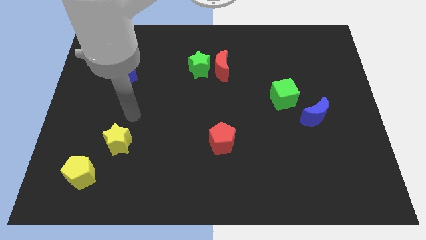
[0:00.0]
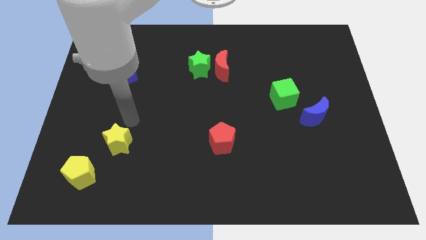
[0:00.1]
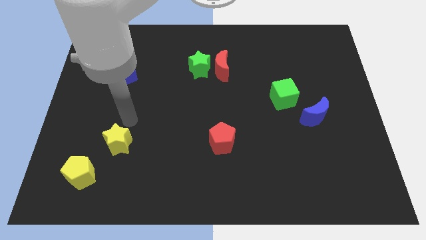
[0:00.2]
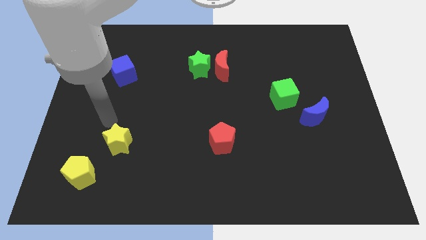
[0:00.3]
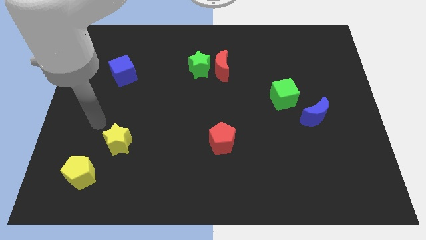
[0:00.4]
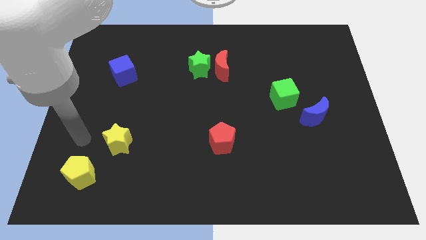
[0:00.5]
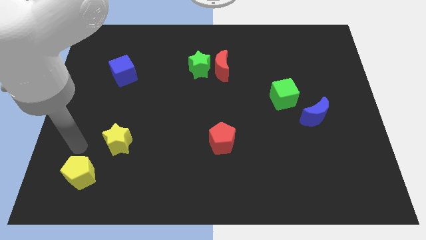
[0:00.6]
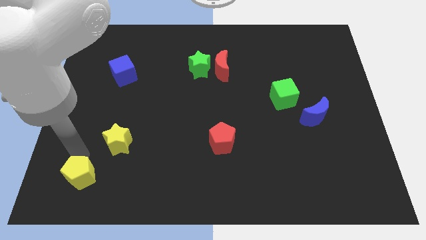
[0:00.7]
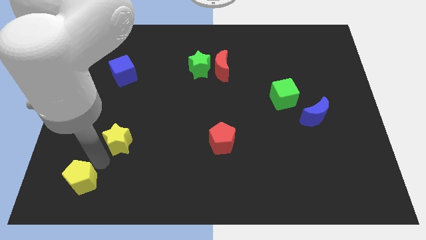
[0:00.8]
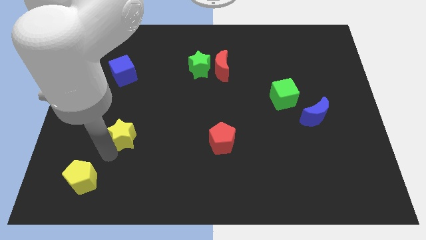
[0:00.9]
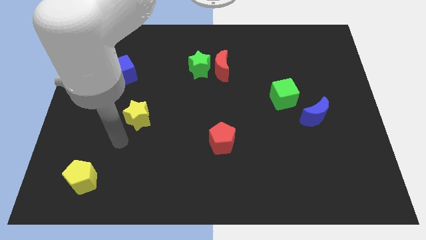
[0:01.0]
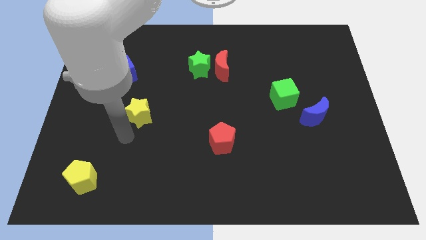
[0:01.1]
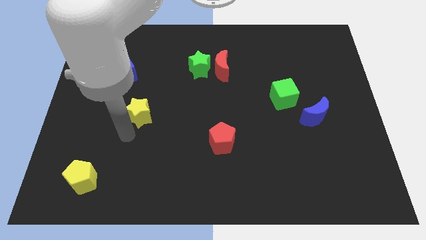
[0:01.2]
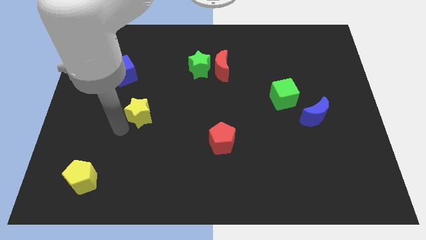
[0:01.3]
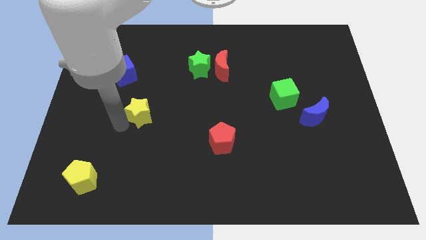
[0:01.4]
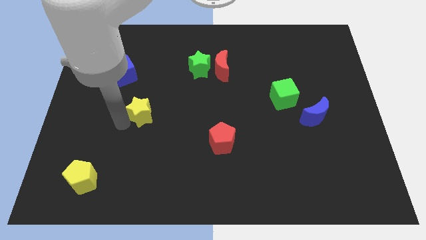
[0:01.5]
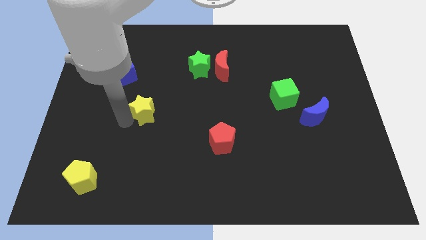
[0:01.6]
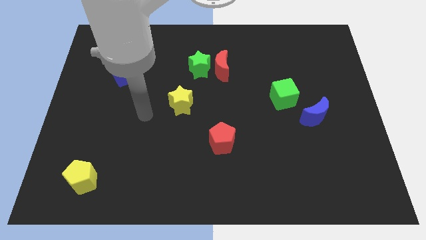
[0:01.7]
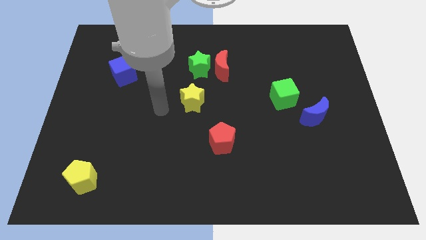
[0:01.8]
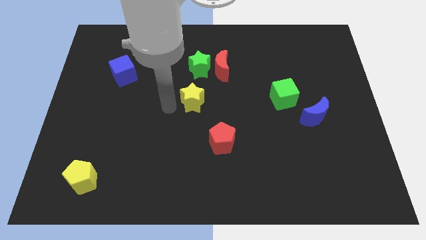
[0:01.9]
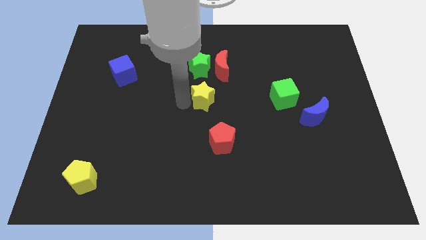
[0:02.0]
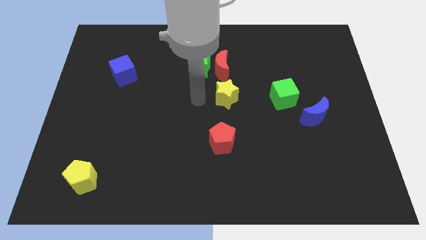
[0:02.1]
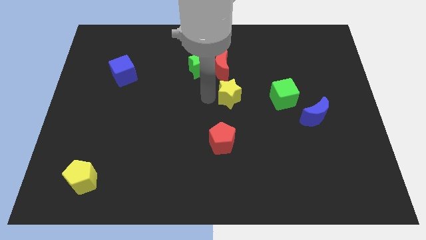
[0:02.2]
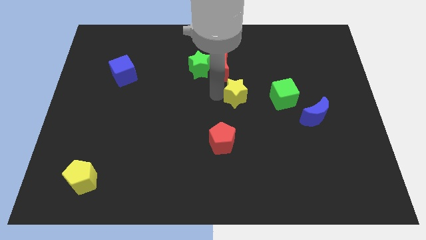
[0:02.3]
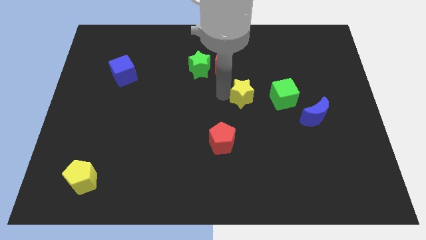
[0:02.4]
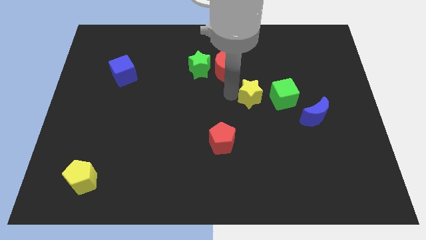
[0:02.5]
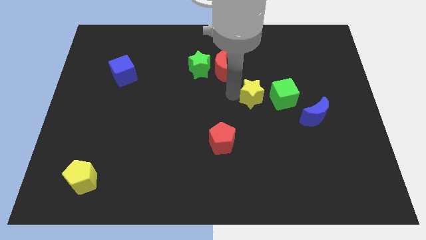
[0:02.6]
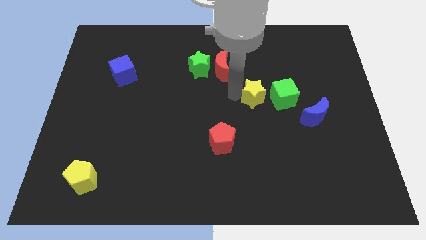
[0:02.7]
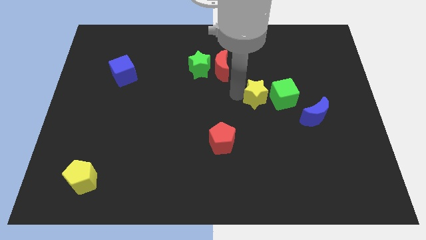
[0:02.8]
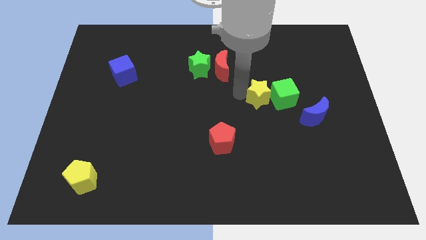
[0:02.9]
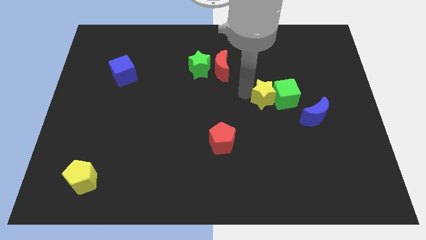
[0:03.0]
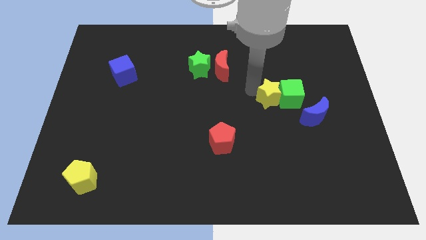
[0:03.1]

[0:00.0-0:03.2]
put the yellow star towards the green cube

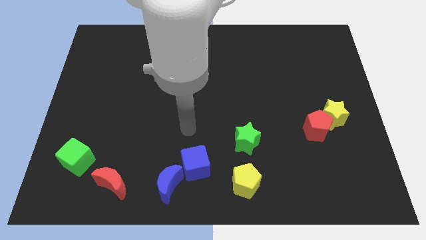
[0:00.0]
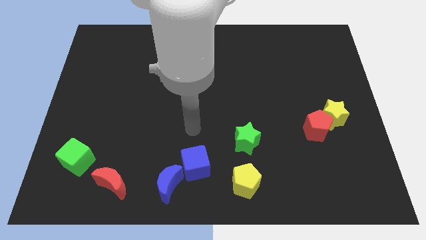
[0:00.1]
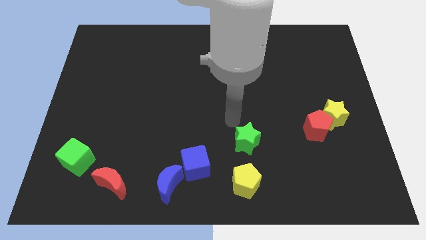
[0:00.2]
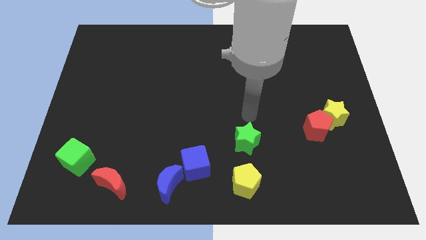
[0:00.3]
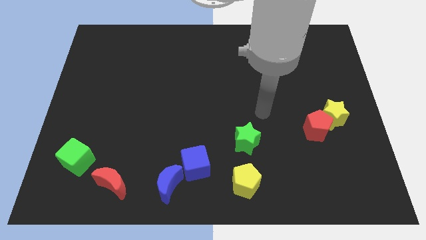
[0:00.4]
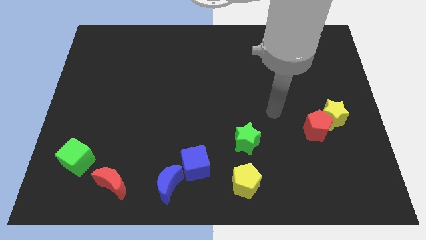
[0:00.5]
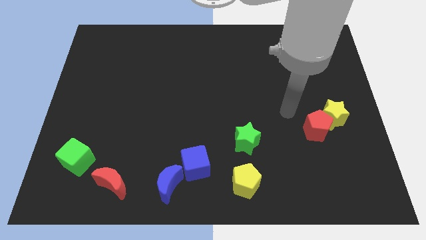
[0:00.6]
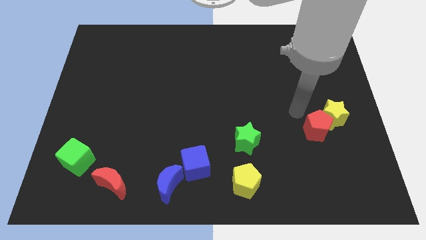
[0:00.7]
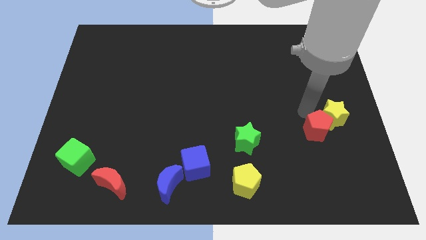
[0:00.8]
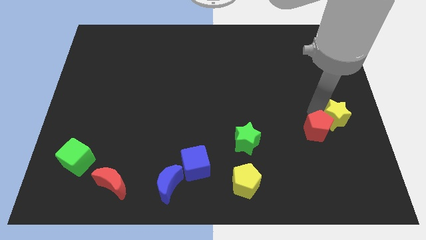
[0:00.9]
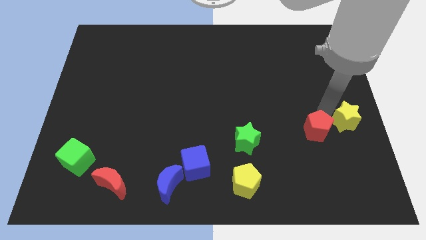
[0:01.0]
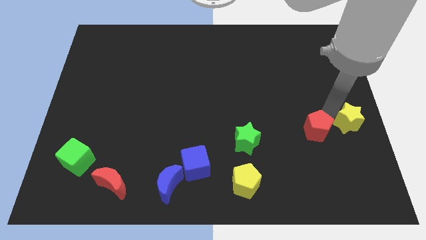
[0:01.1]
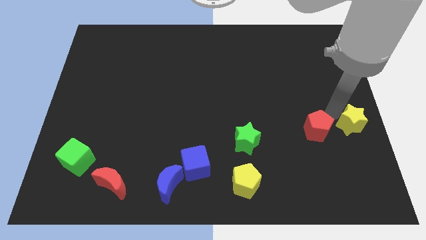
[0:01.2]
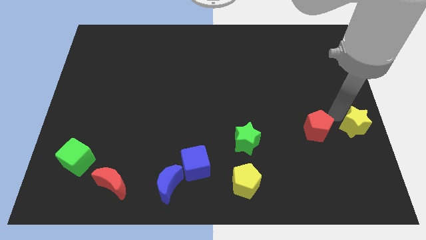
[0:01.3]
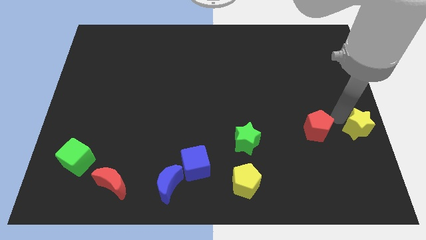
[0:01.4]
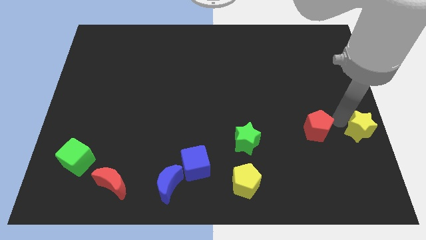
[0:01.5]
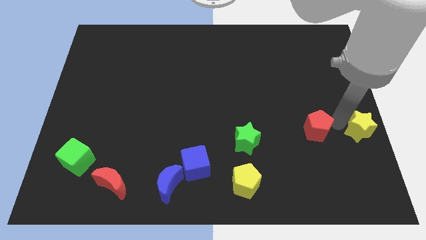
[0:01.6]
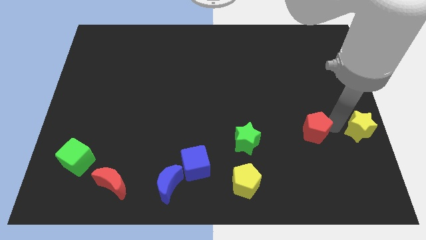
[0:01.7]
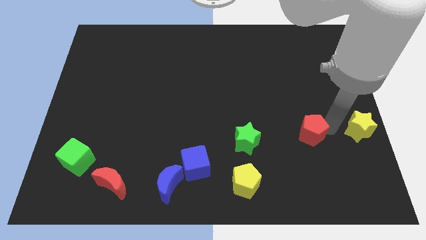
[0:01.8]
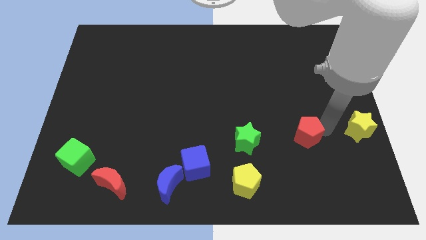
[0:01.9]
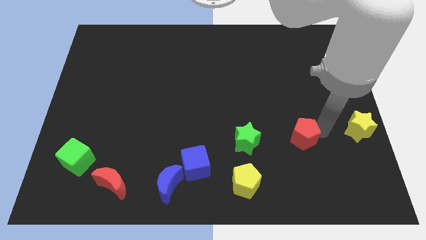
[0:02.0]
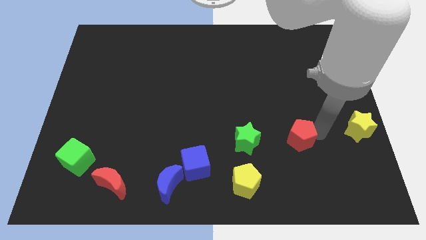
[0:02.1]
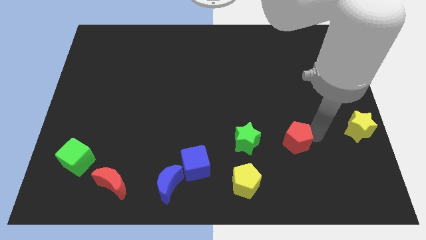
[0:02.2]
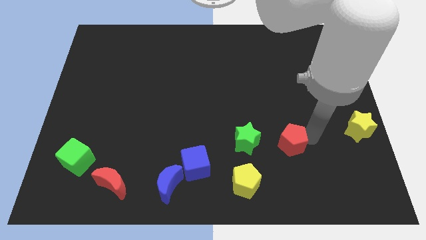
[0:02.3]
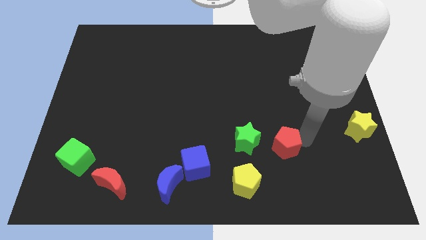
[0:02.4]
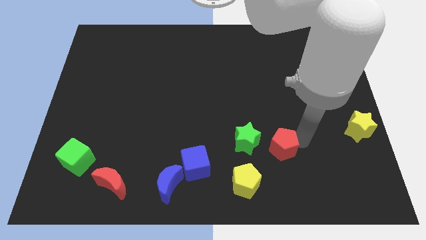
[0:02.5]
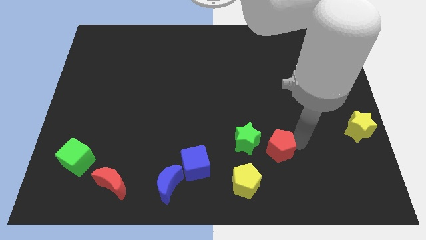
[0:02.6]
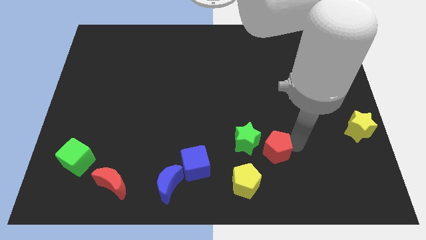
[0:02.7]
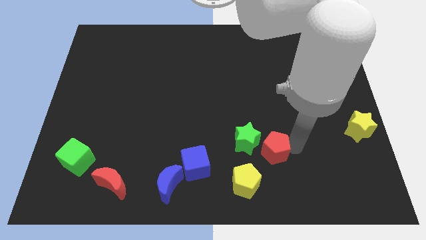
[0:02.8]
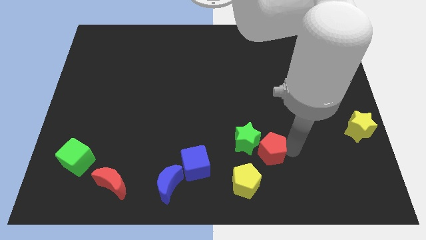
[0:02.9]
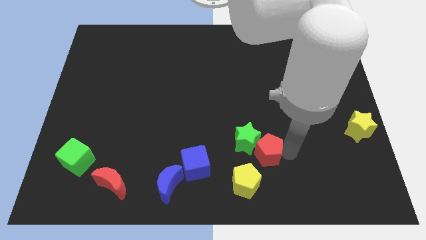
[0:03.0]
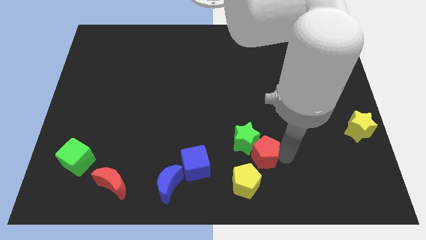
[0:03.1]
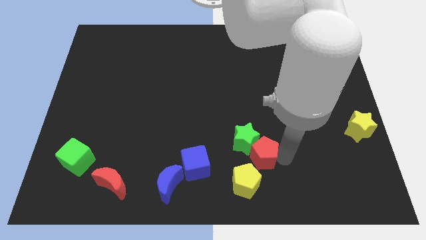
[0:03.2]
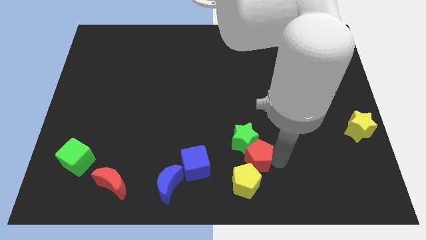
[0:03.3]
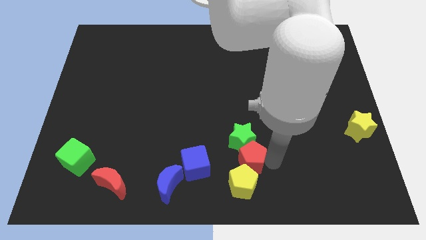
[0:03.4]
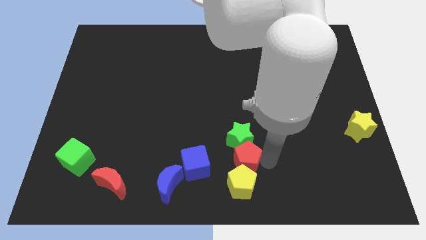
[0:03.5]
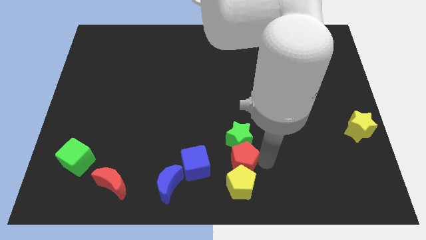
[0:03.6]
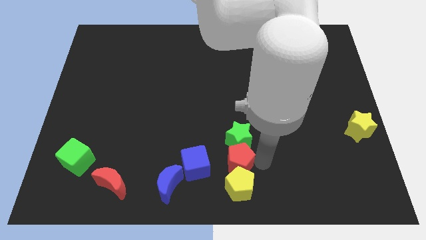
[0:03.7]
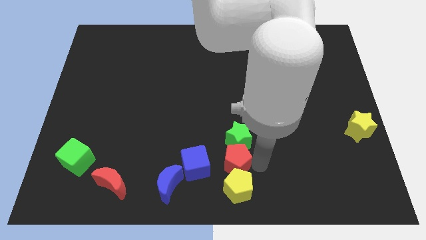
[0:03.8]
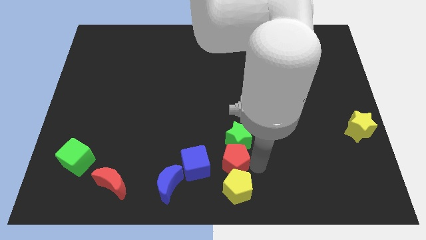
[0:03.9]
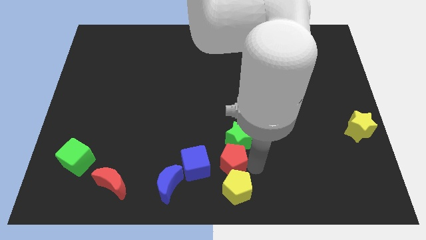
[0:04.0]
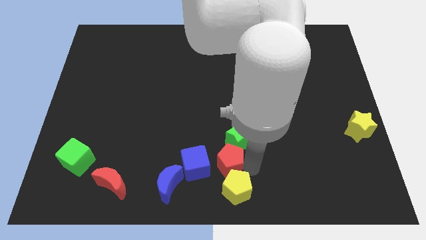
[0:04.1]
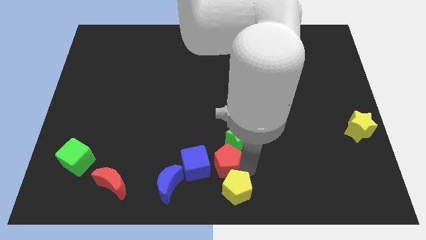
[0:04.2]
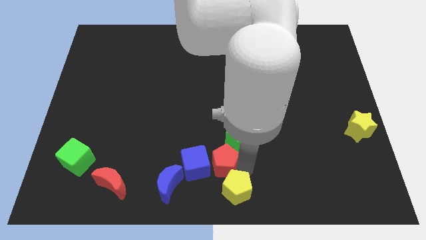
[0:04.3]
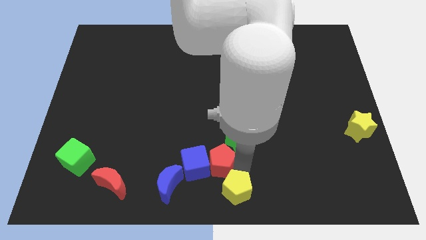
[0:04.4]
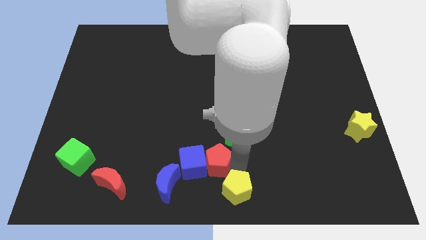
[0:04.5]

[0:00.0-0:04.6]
push the red pentagon to the blue cube

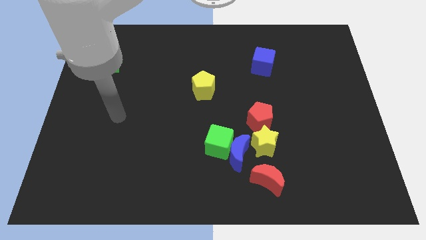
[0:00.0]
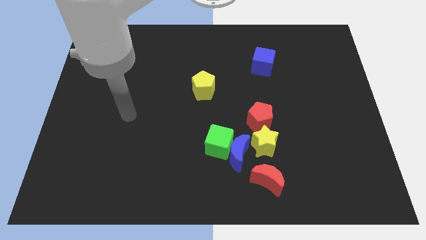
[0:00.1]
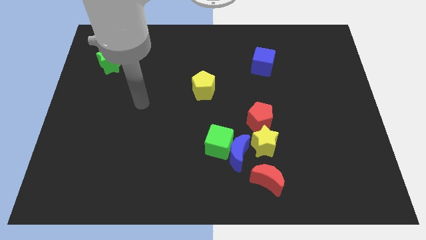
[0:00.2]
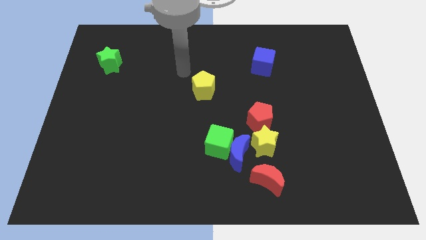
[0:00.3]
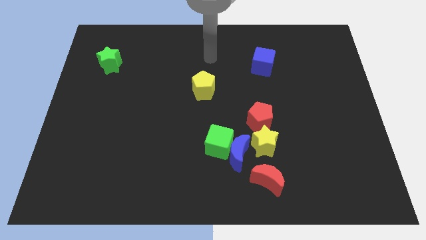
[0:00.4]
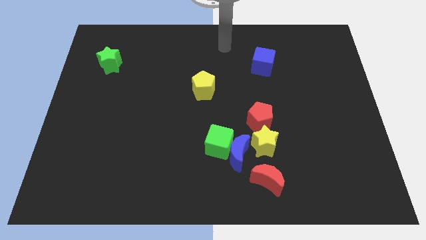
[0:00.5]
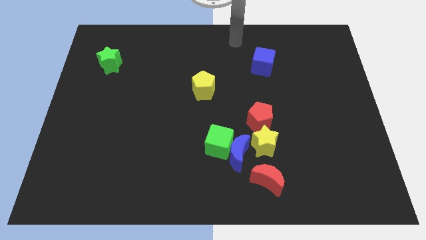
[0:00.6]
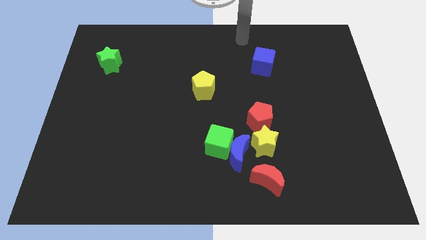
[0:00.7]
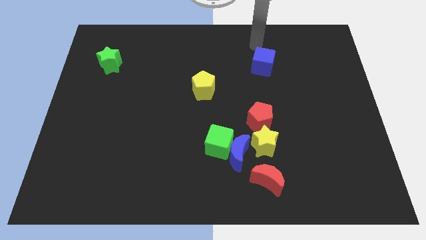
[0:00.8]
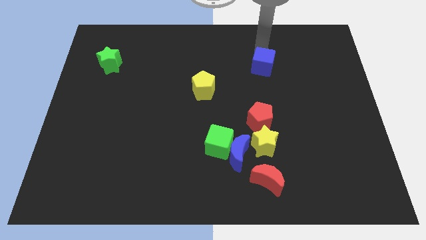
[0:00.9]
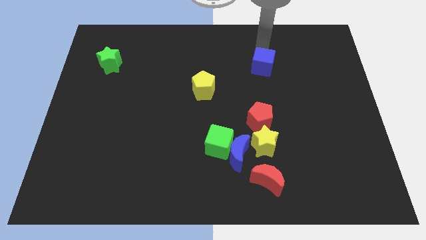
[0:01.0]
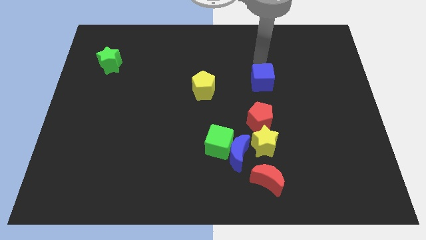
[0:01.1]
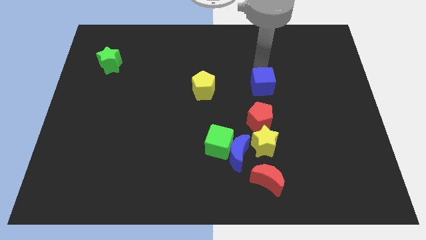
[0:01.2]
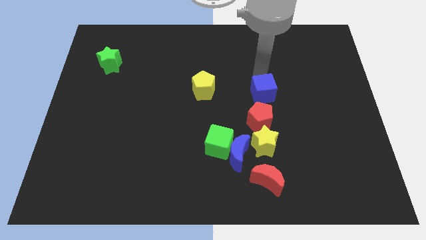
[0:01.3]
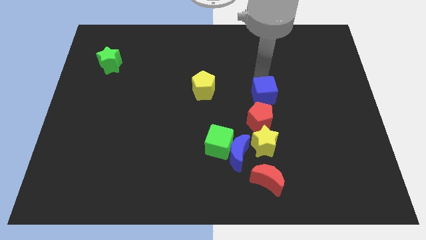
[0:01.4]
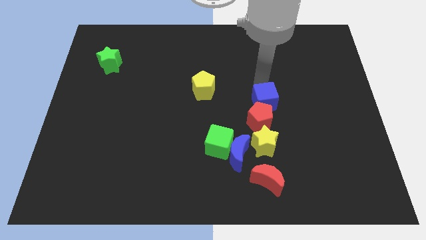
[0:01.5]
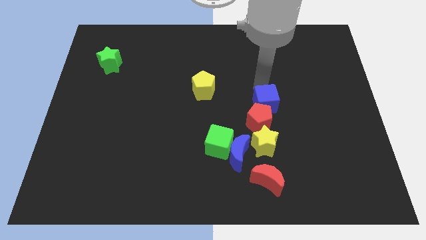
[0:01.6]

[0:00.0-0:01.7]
slide the blue cube close to the red pentagon
